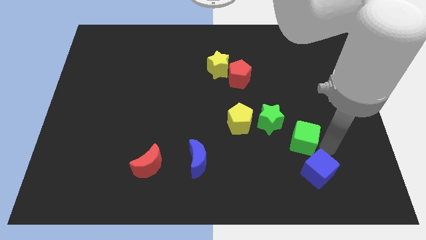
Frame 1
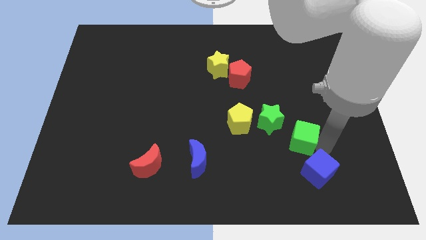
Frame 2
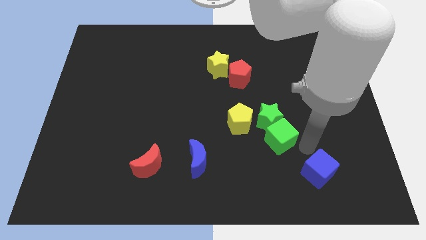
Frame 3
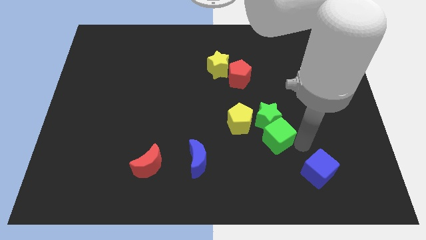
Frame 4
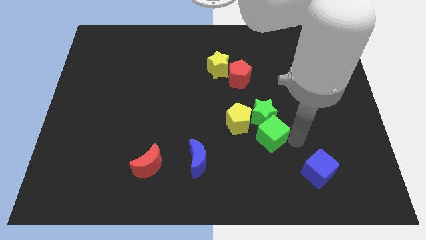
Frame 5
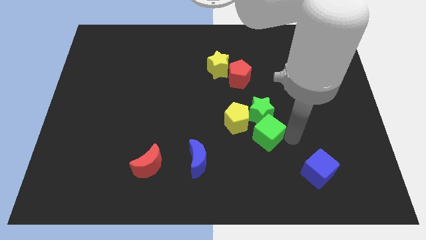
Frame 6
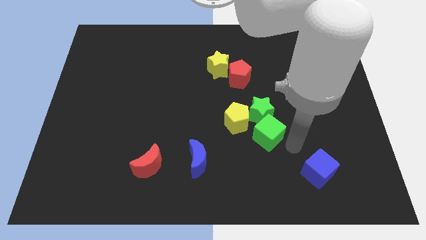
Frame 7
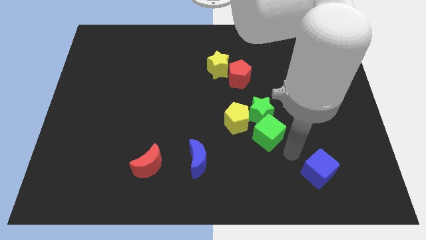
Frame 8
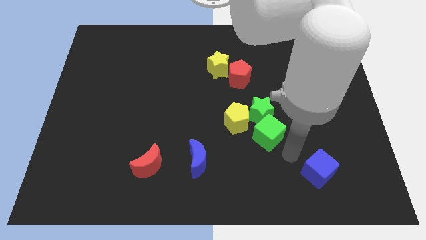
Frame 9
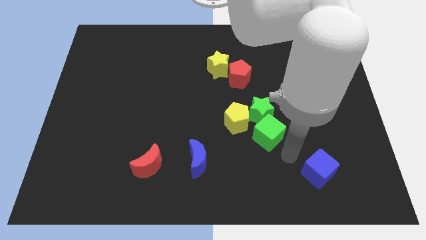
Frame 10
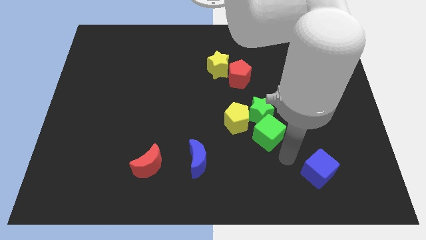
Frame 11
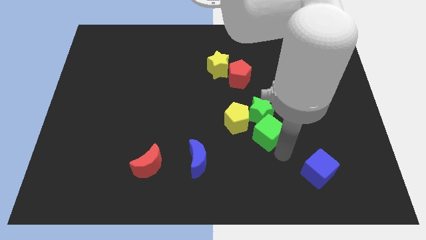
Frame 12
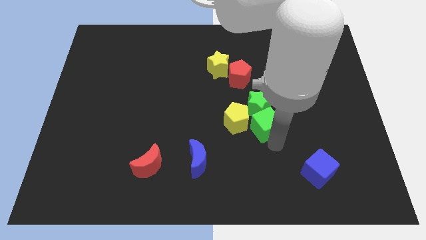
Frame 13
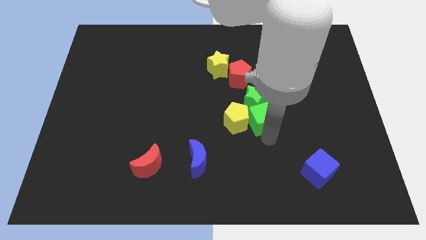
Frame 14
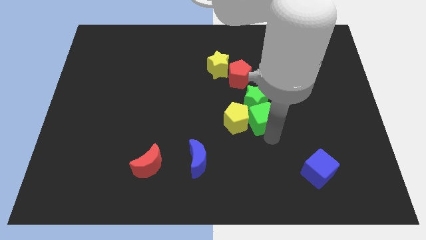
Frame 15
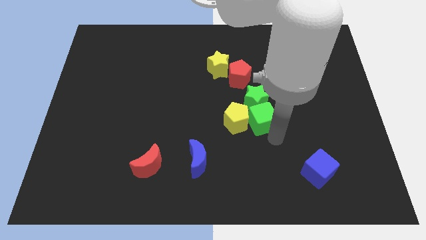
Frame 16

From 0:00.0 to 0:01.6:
drag the green blocks into the right side of the yellow pentagon

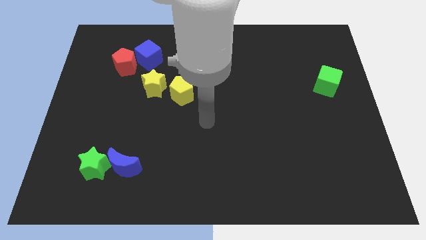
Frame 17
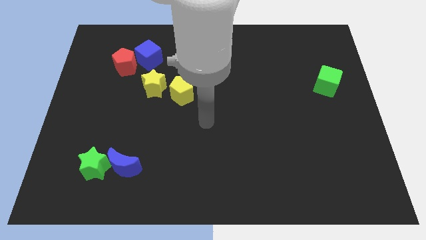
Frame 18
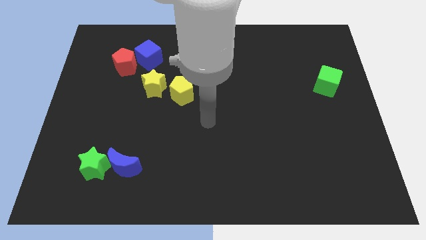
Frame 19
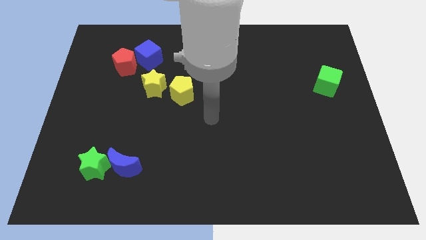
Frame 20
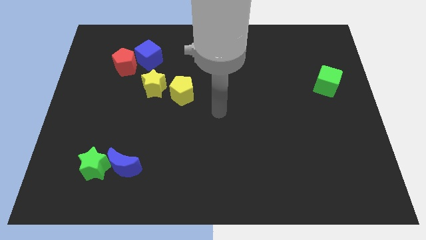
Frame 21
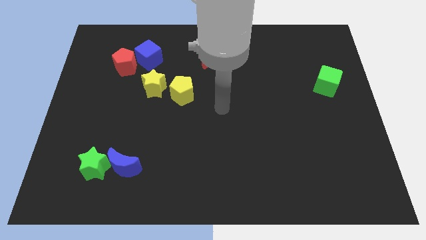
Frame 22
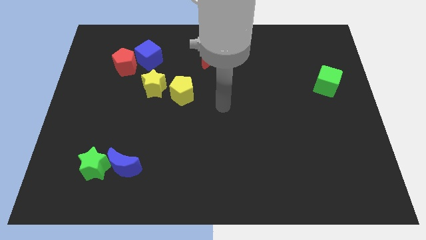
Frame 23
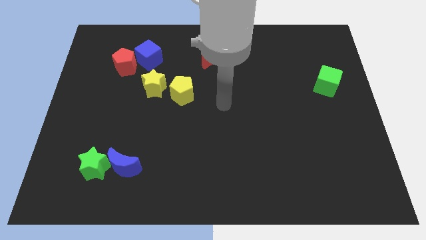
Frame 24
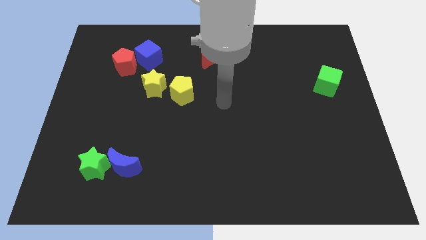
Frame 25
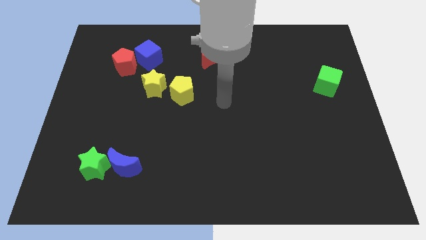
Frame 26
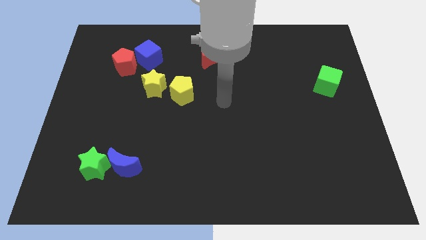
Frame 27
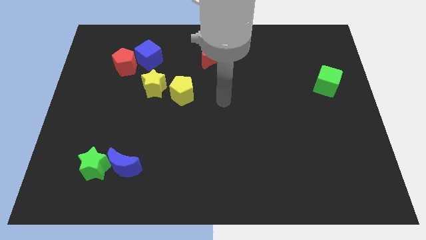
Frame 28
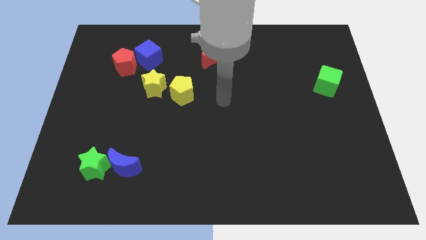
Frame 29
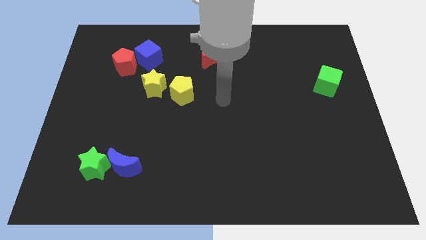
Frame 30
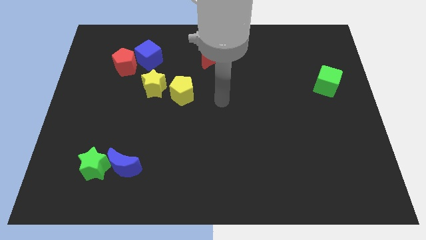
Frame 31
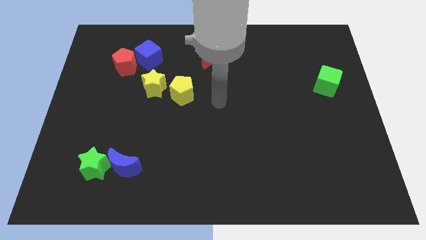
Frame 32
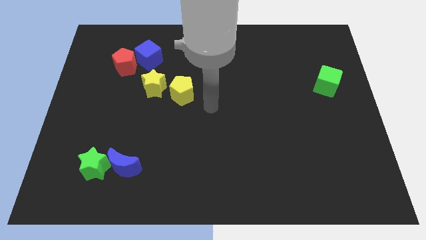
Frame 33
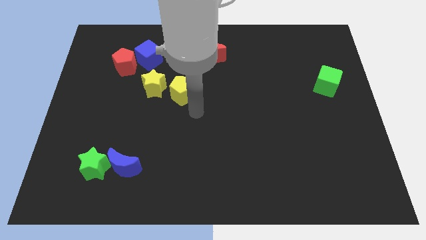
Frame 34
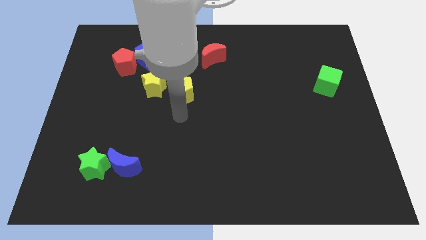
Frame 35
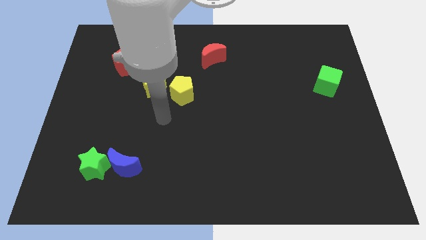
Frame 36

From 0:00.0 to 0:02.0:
move the arm at the bottom of the yellow pentagon

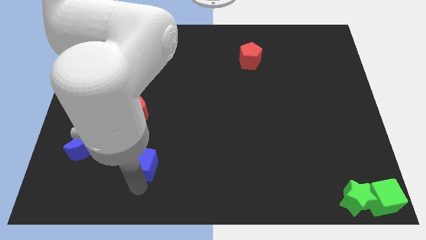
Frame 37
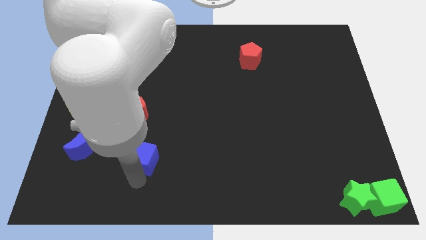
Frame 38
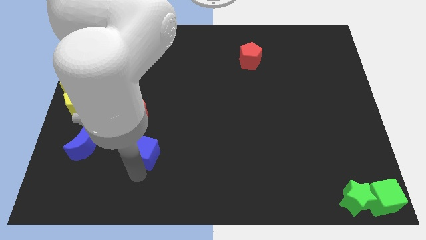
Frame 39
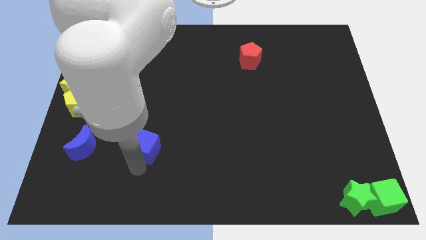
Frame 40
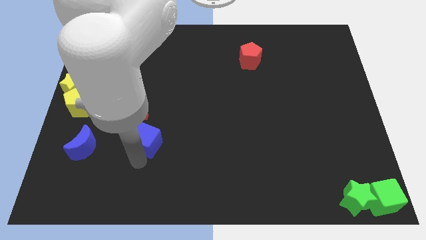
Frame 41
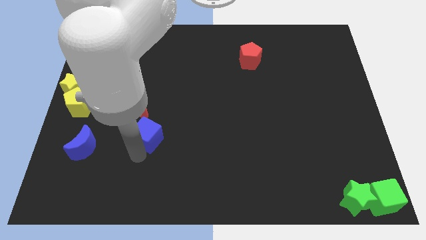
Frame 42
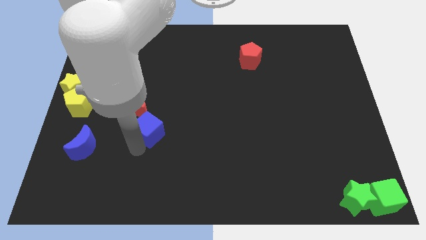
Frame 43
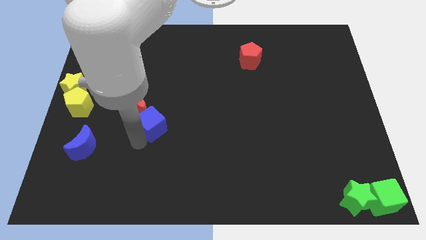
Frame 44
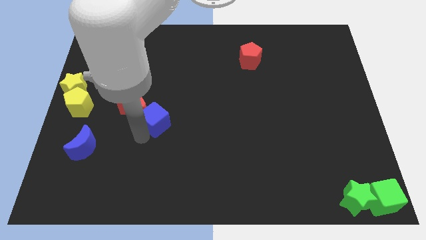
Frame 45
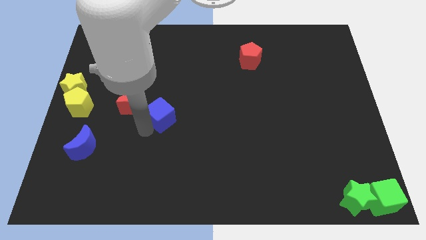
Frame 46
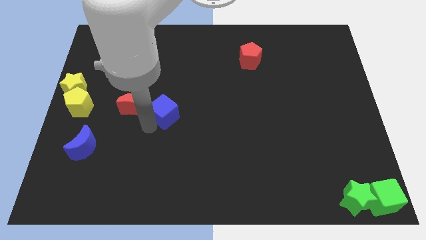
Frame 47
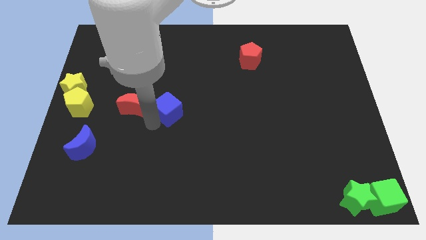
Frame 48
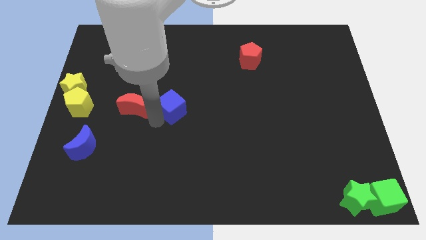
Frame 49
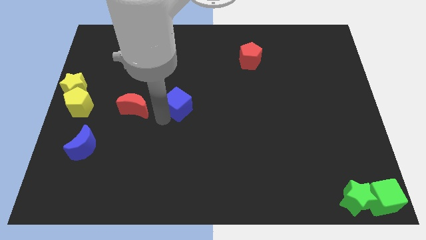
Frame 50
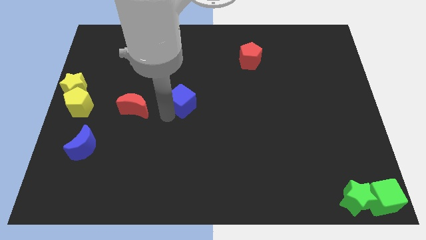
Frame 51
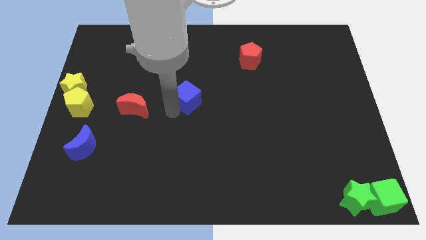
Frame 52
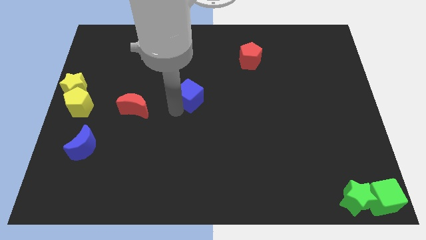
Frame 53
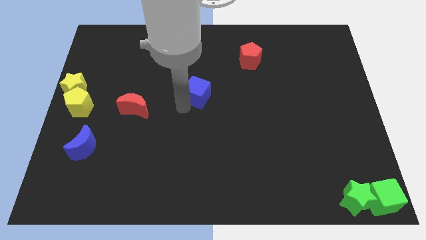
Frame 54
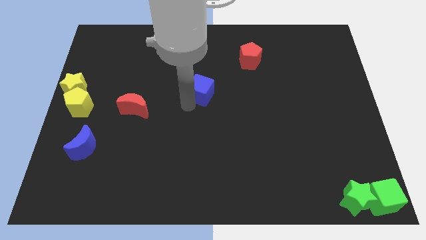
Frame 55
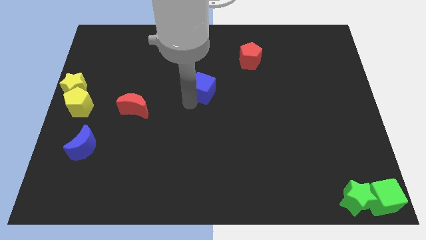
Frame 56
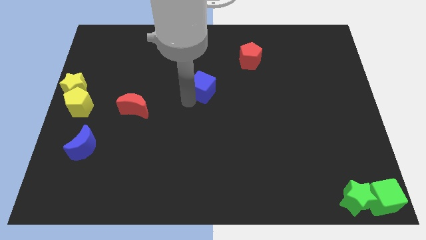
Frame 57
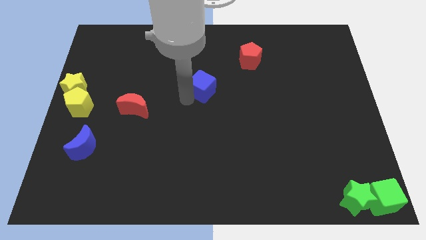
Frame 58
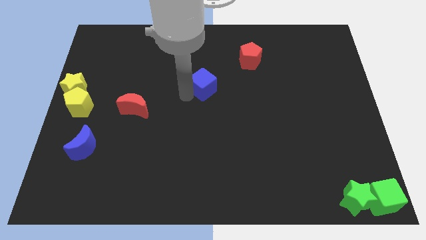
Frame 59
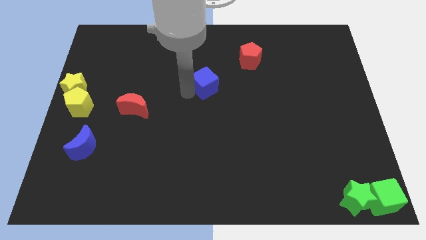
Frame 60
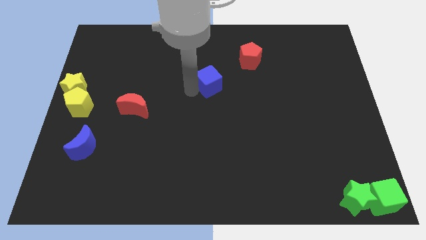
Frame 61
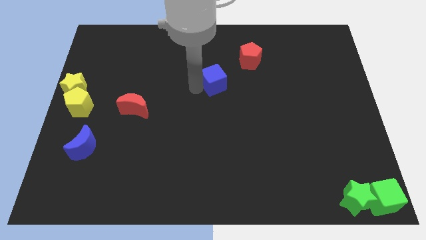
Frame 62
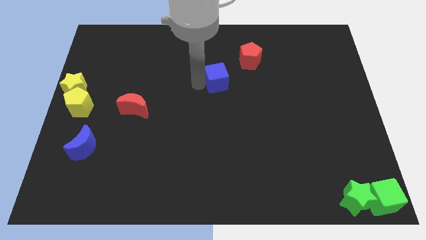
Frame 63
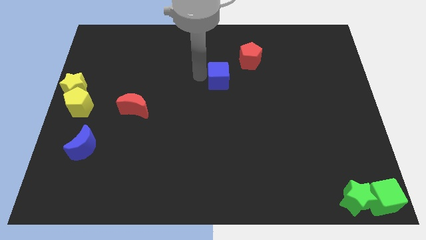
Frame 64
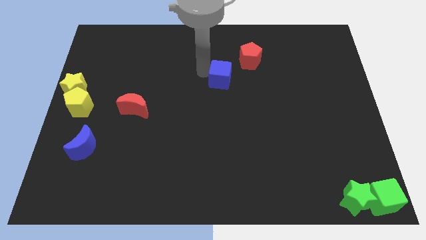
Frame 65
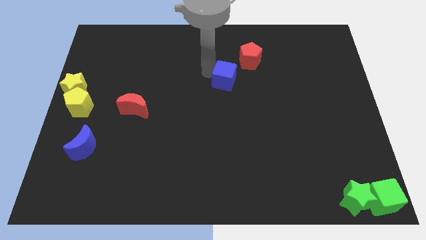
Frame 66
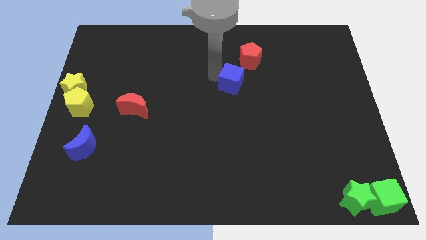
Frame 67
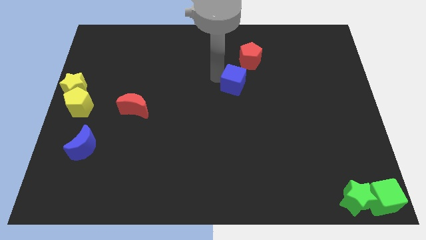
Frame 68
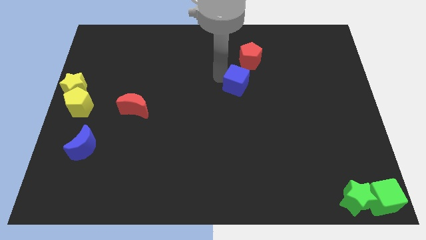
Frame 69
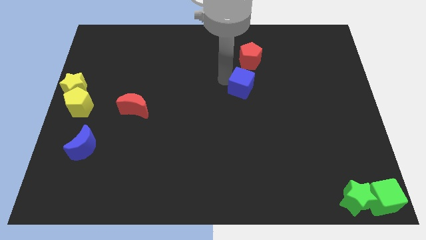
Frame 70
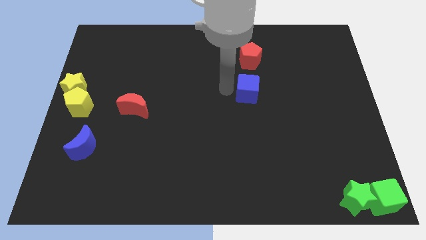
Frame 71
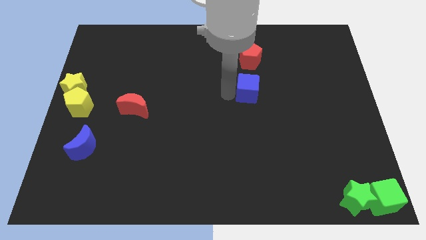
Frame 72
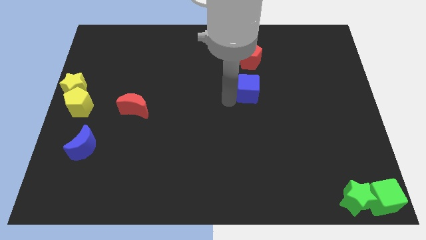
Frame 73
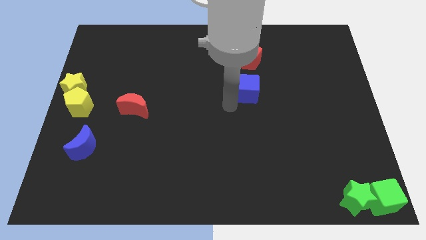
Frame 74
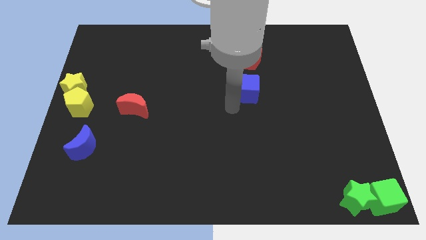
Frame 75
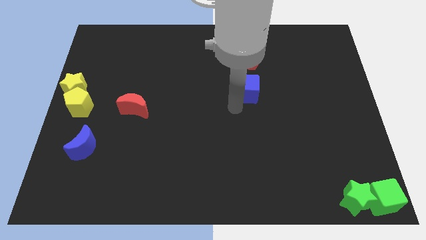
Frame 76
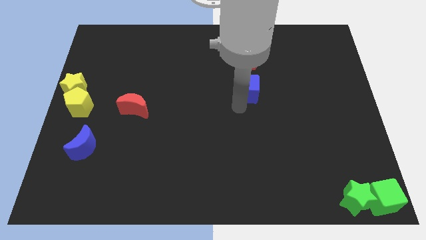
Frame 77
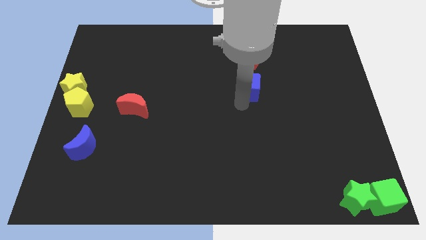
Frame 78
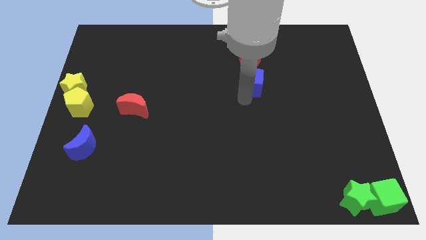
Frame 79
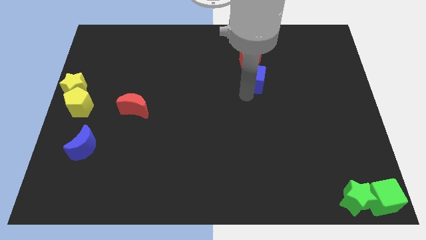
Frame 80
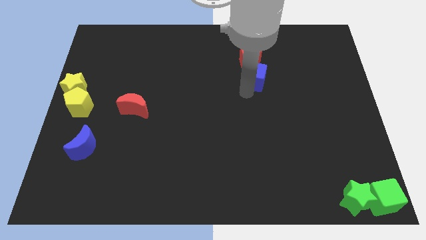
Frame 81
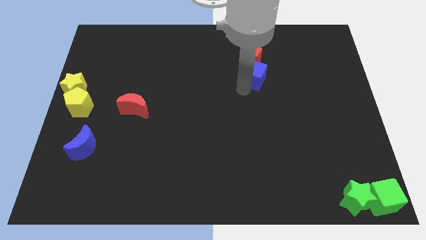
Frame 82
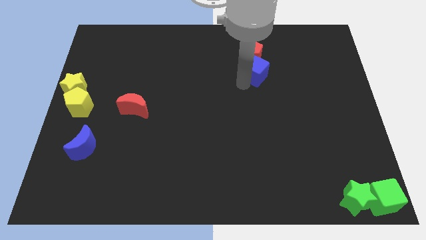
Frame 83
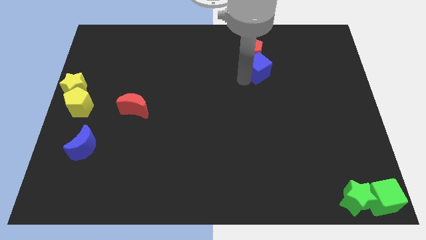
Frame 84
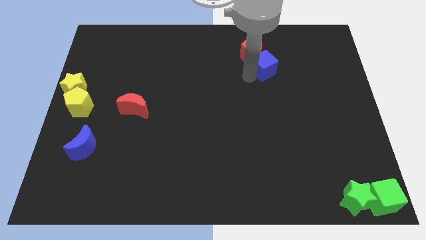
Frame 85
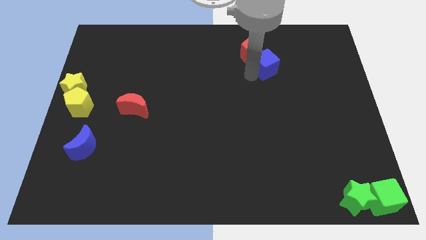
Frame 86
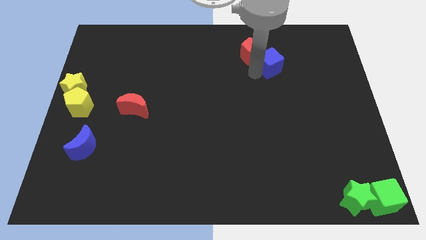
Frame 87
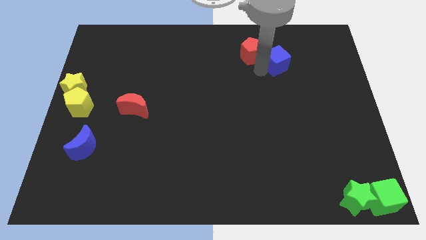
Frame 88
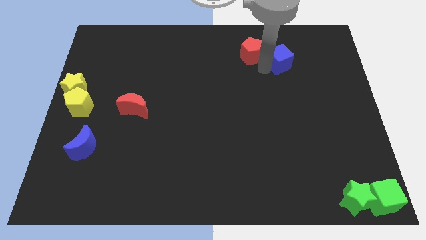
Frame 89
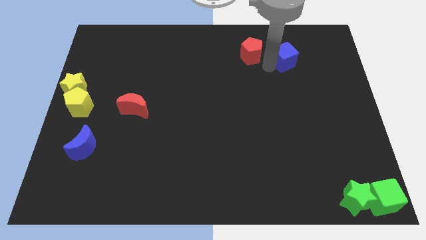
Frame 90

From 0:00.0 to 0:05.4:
push the blue cube into the red pentagon

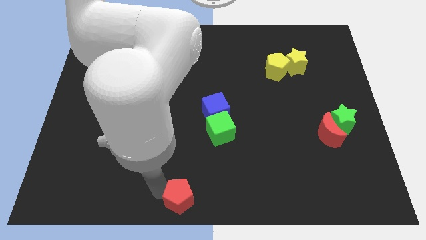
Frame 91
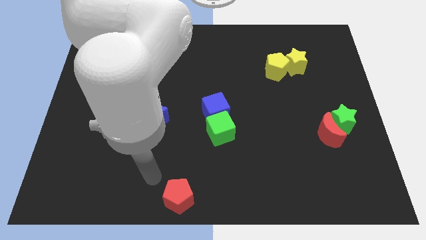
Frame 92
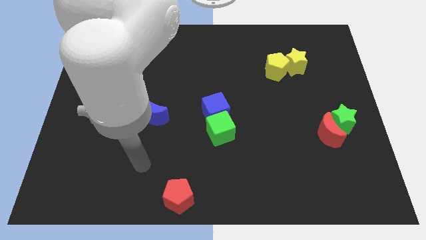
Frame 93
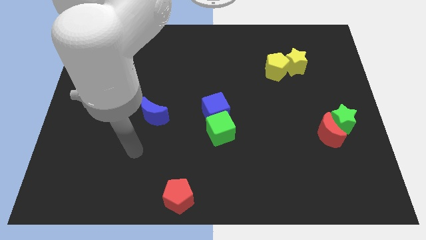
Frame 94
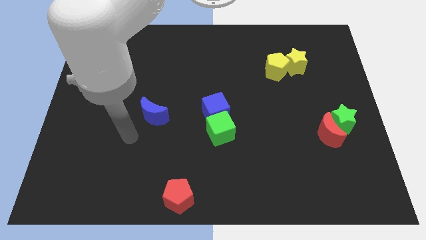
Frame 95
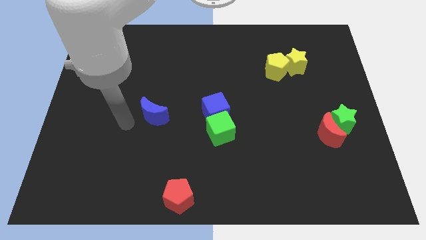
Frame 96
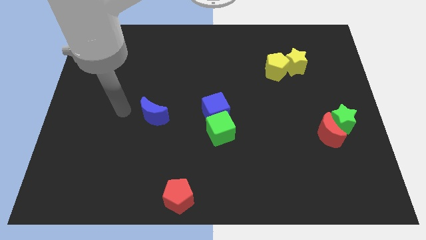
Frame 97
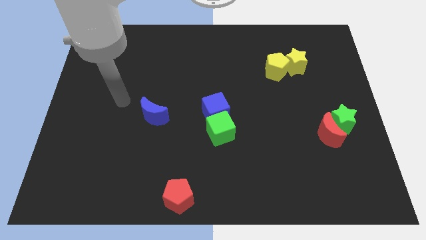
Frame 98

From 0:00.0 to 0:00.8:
move your arm away from red pentagon
